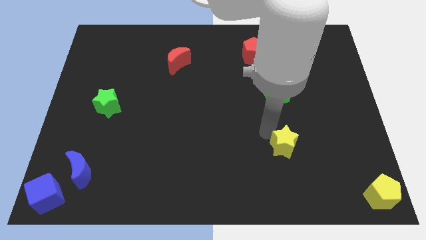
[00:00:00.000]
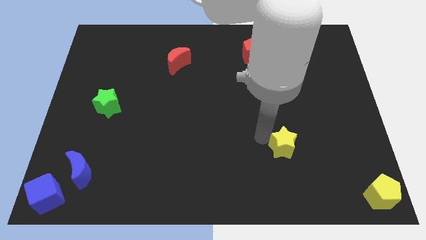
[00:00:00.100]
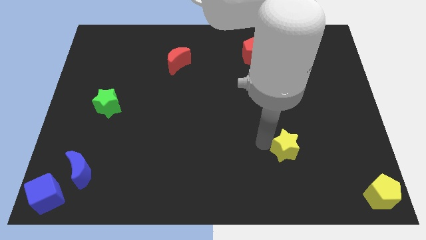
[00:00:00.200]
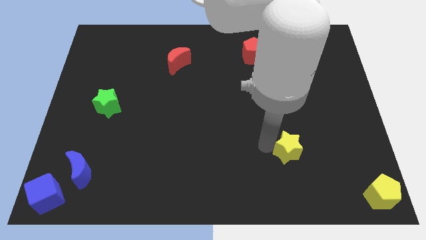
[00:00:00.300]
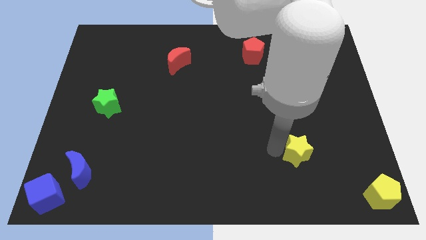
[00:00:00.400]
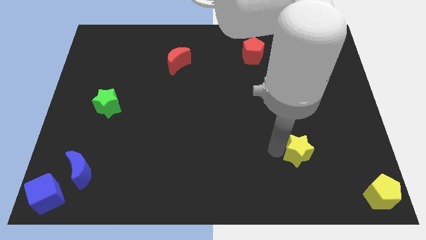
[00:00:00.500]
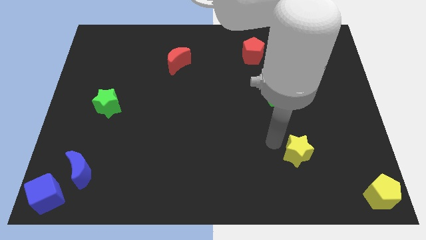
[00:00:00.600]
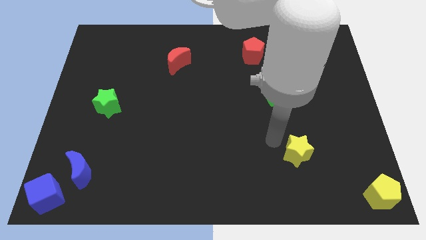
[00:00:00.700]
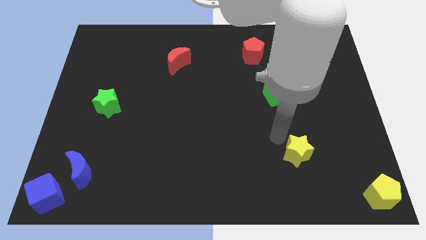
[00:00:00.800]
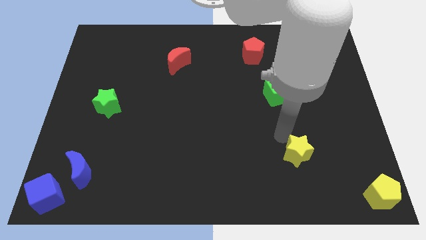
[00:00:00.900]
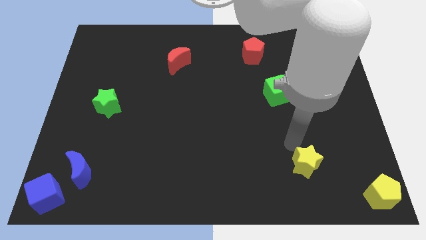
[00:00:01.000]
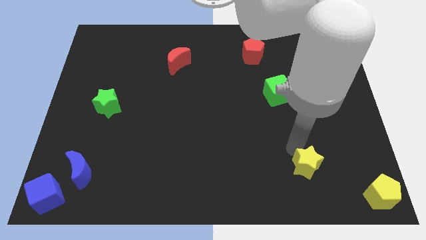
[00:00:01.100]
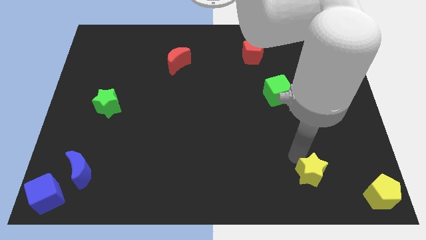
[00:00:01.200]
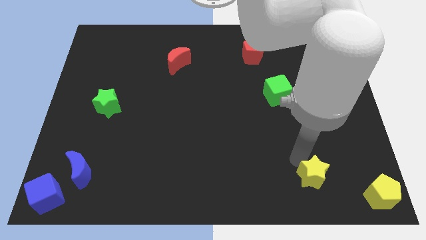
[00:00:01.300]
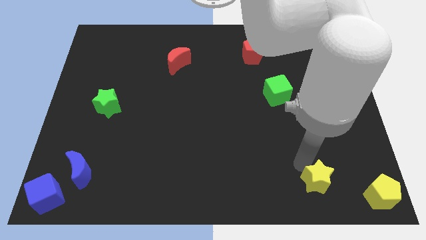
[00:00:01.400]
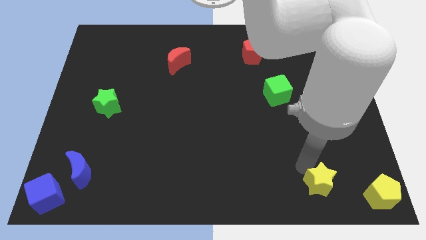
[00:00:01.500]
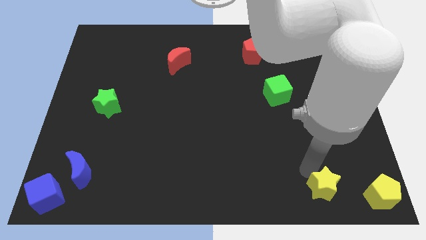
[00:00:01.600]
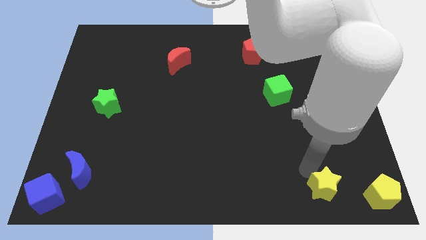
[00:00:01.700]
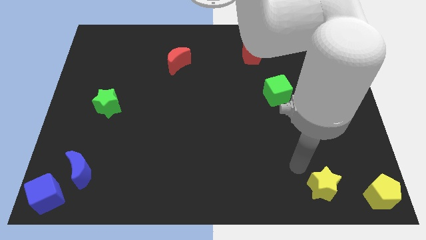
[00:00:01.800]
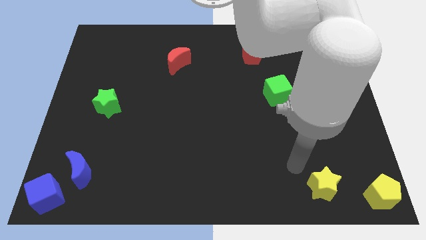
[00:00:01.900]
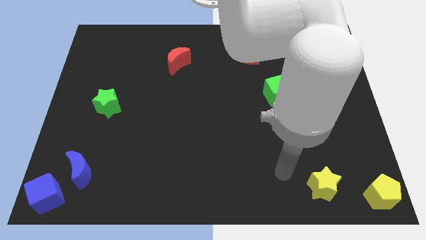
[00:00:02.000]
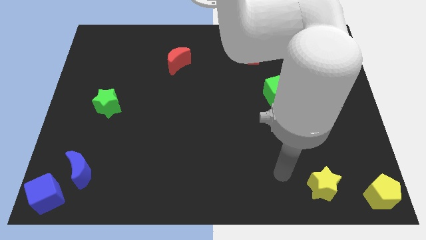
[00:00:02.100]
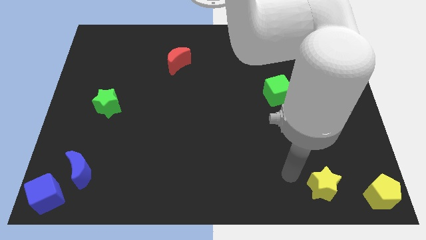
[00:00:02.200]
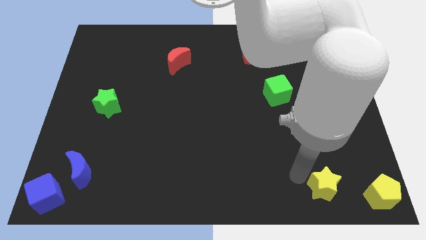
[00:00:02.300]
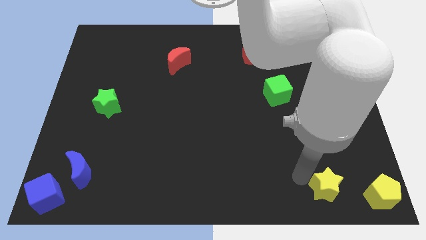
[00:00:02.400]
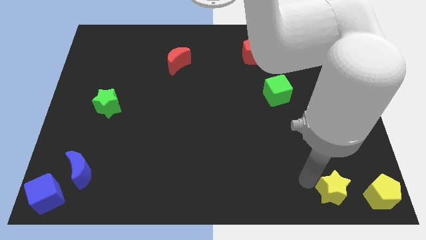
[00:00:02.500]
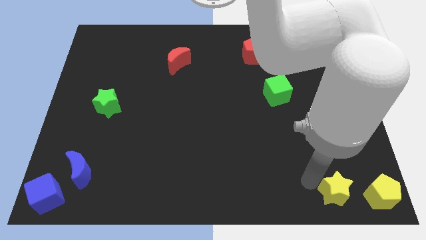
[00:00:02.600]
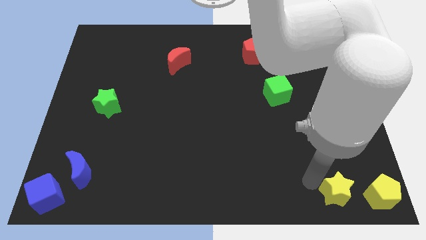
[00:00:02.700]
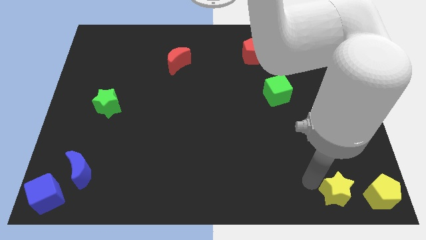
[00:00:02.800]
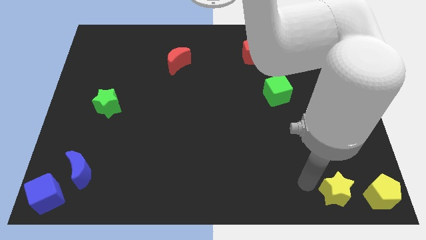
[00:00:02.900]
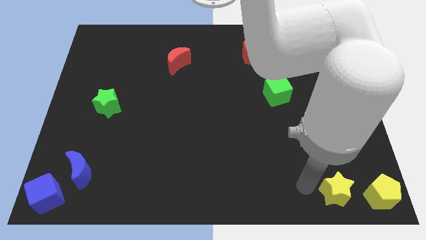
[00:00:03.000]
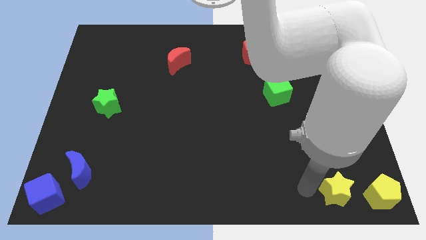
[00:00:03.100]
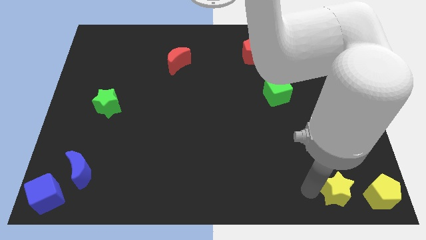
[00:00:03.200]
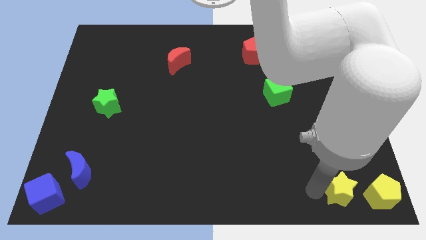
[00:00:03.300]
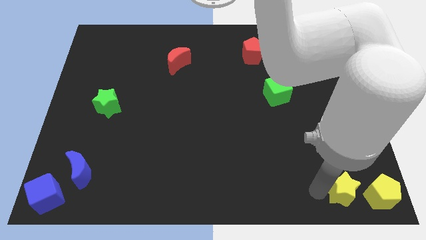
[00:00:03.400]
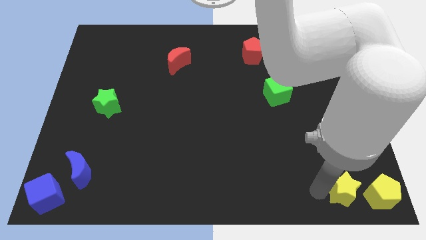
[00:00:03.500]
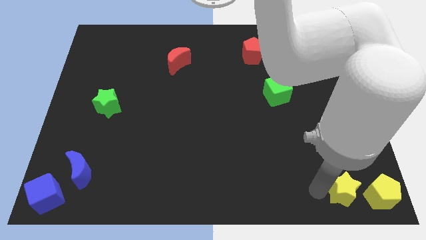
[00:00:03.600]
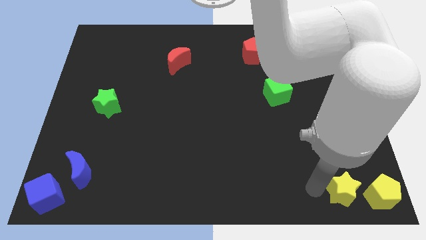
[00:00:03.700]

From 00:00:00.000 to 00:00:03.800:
slide the yellow star parallel left to the yellow pentagon

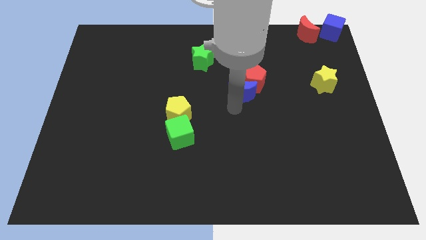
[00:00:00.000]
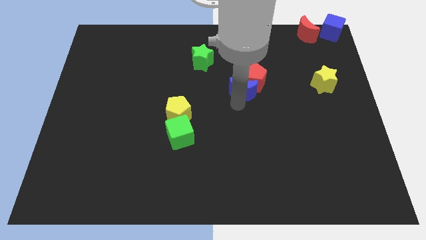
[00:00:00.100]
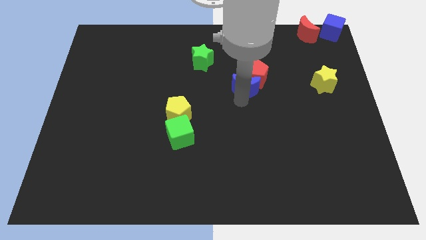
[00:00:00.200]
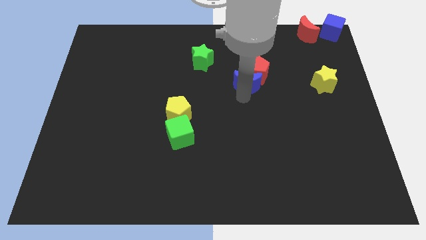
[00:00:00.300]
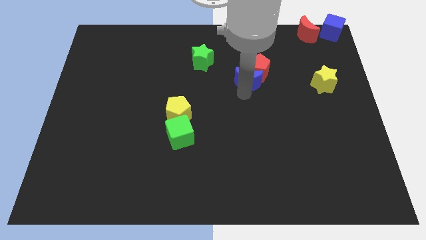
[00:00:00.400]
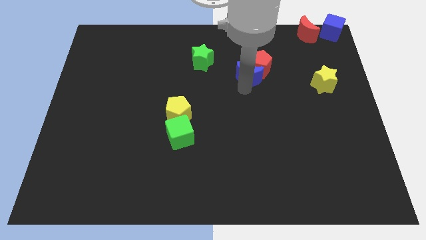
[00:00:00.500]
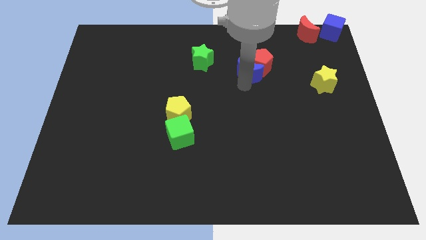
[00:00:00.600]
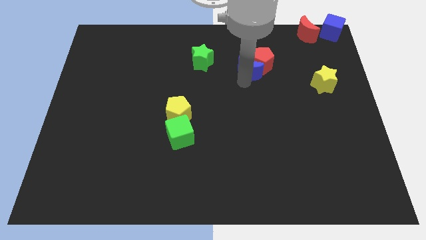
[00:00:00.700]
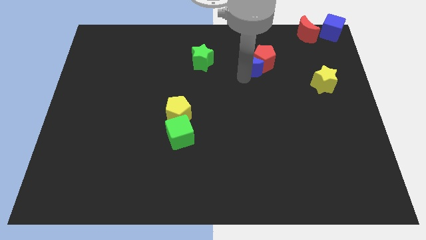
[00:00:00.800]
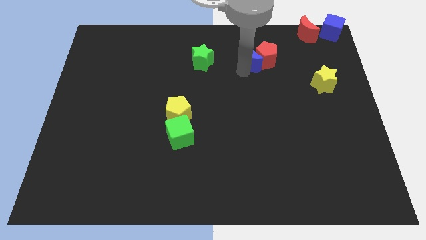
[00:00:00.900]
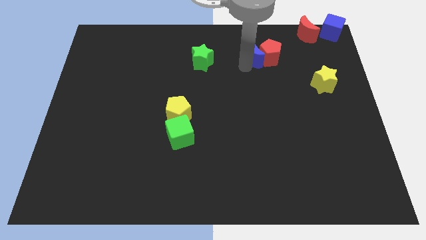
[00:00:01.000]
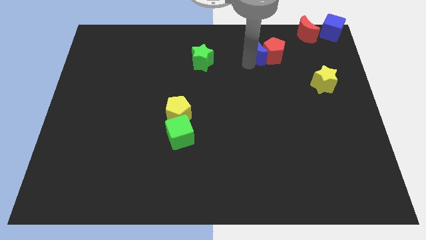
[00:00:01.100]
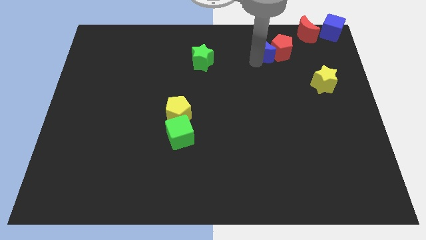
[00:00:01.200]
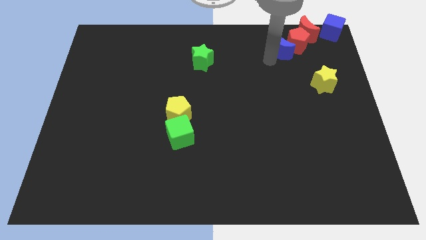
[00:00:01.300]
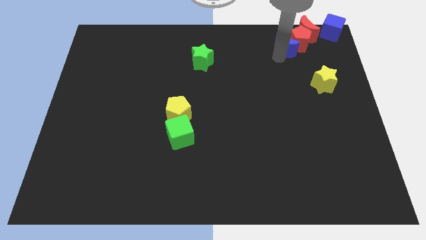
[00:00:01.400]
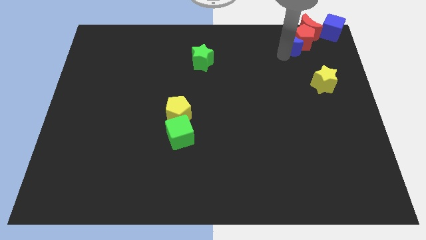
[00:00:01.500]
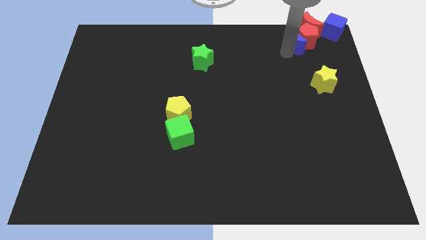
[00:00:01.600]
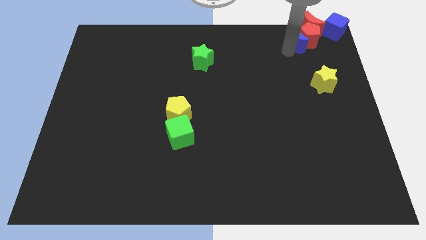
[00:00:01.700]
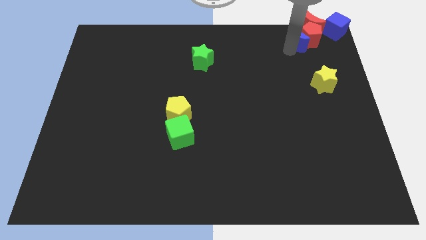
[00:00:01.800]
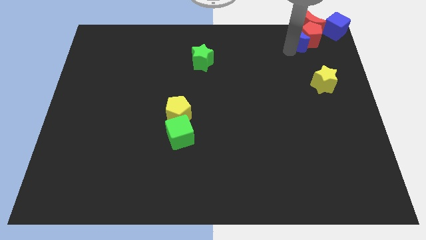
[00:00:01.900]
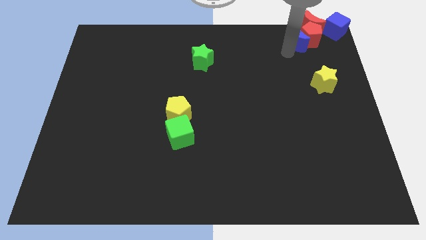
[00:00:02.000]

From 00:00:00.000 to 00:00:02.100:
push the blue crescent along with red pentagon to the top right of the board

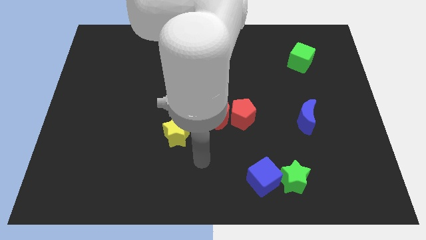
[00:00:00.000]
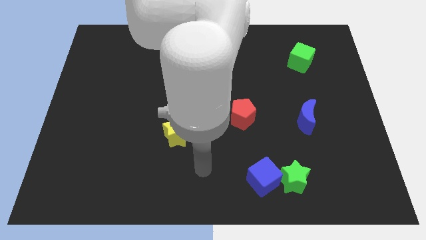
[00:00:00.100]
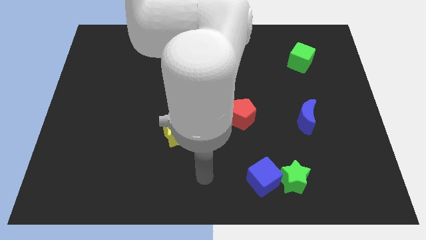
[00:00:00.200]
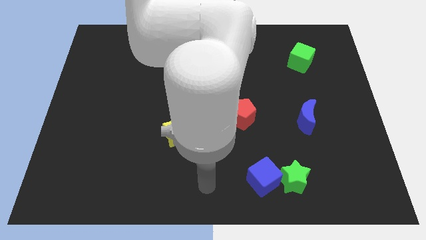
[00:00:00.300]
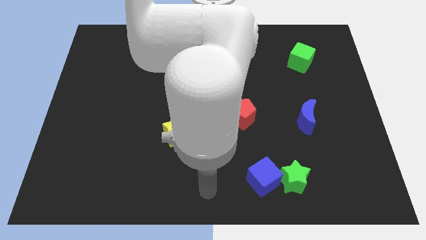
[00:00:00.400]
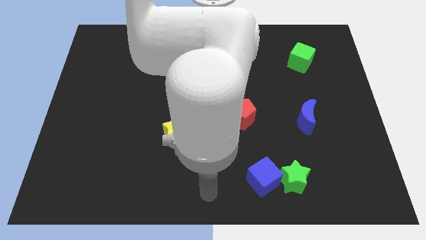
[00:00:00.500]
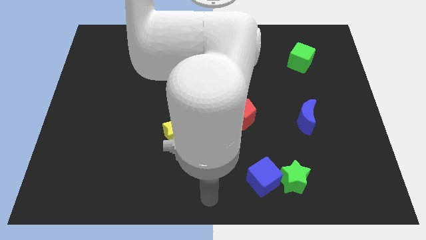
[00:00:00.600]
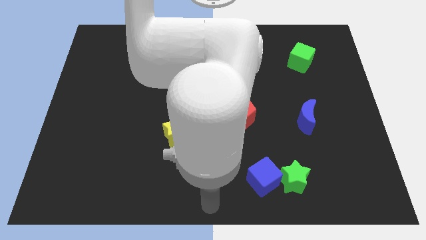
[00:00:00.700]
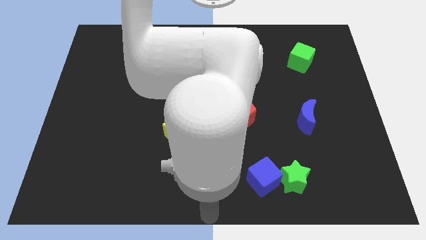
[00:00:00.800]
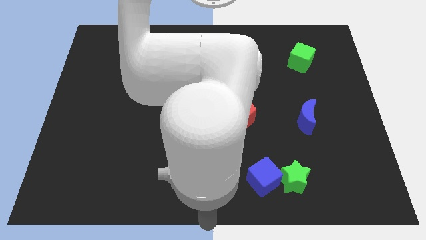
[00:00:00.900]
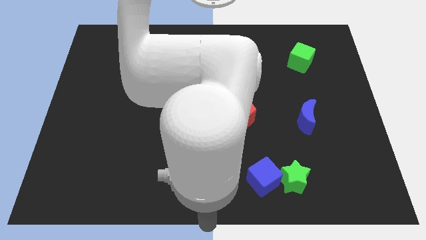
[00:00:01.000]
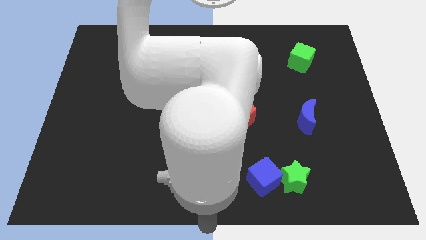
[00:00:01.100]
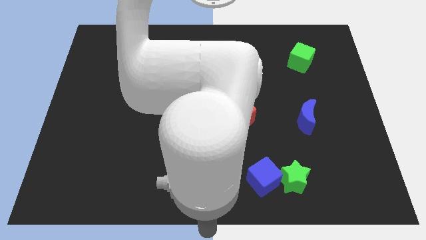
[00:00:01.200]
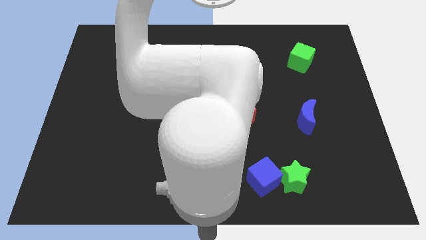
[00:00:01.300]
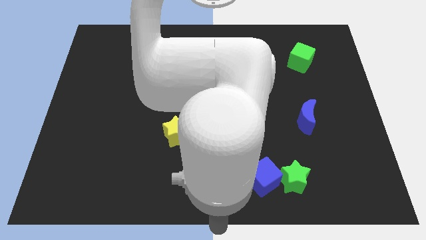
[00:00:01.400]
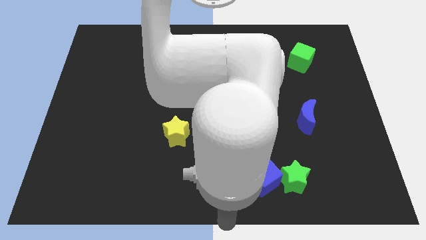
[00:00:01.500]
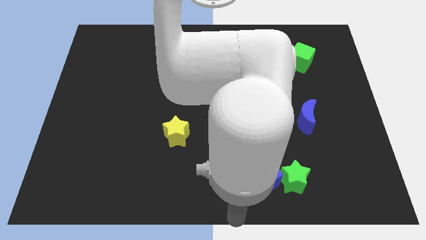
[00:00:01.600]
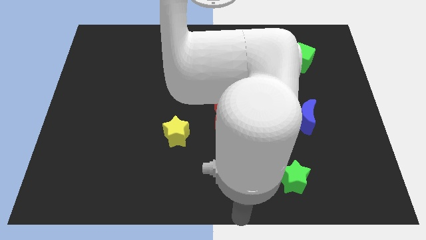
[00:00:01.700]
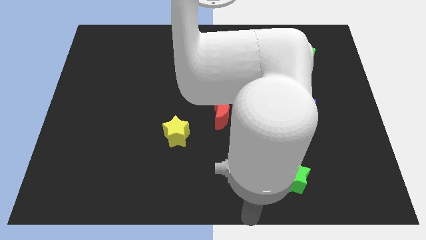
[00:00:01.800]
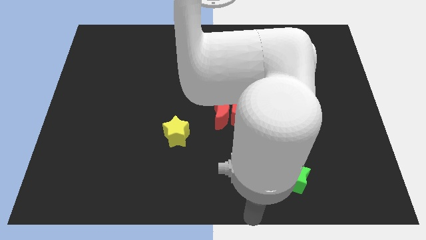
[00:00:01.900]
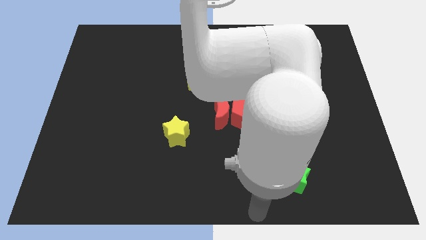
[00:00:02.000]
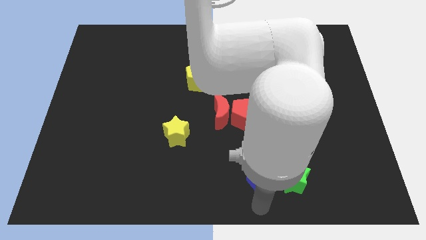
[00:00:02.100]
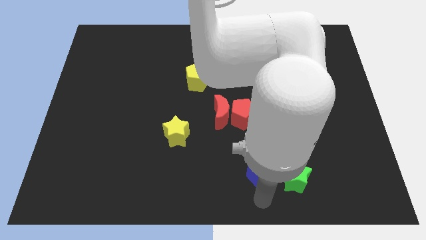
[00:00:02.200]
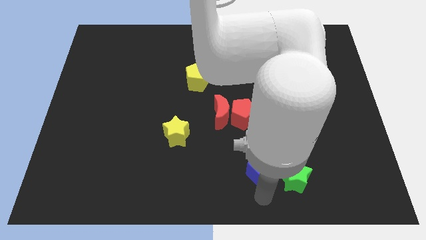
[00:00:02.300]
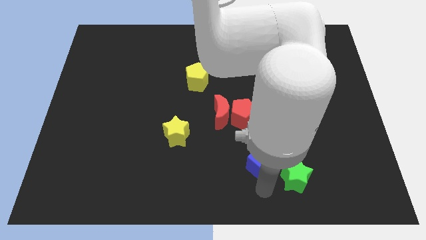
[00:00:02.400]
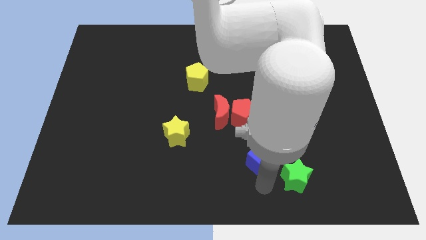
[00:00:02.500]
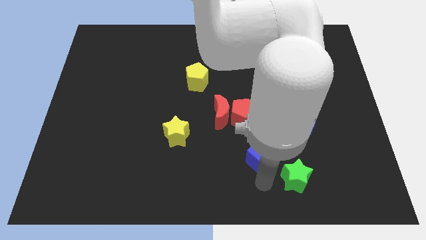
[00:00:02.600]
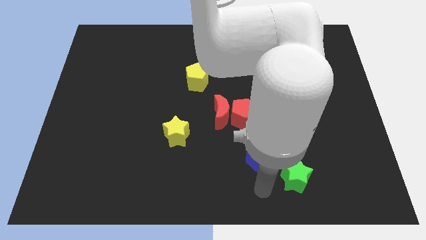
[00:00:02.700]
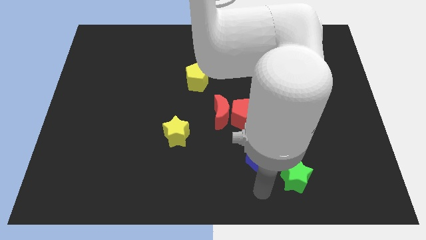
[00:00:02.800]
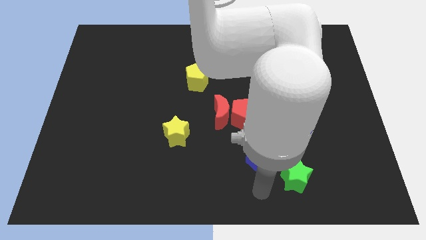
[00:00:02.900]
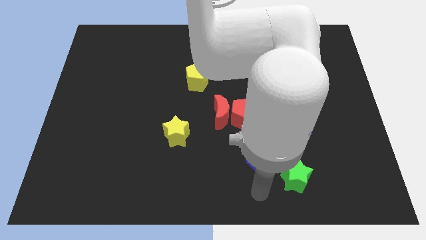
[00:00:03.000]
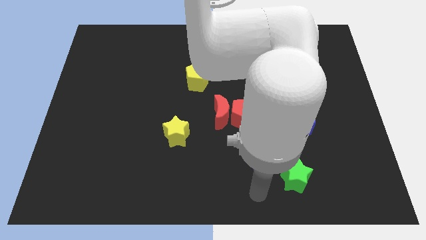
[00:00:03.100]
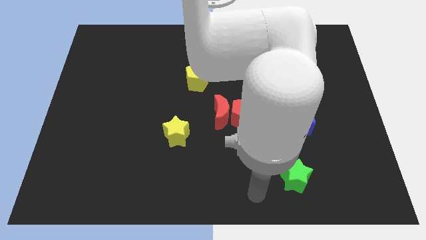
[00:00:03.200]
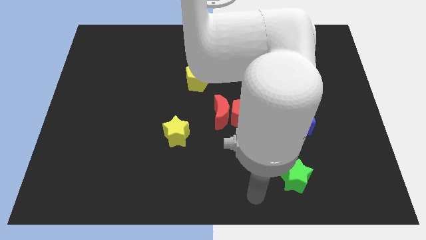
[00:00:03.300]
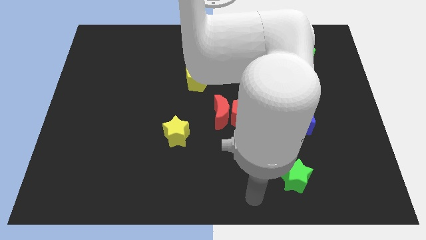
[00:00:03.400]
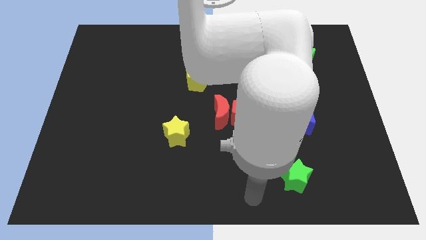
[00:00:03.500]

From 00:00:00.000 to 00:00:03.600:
move the blue cube slightly upwards
